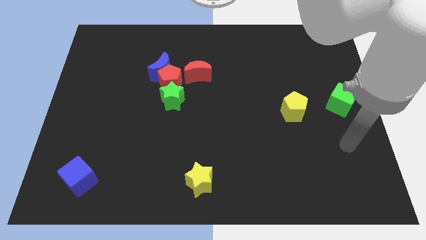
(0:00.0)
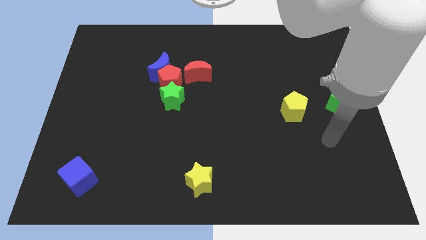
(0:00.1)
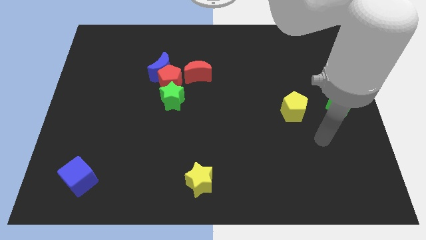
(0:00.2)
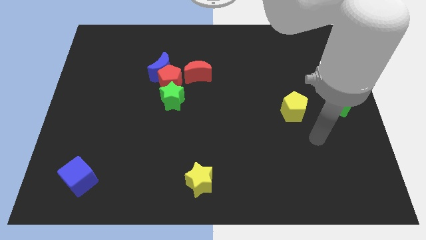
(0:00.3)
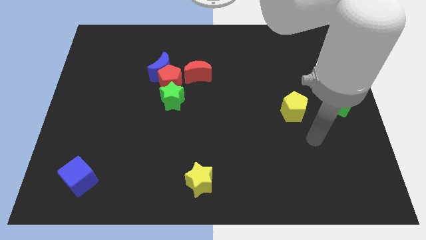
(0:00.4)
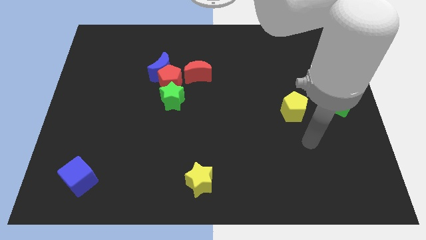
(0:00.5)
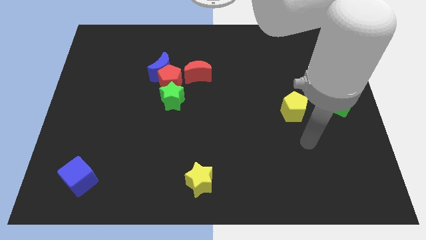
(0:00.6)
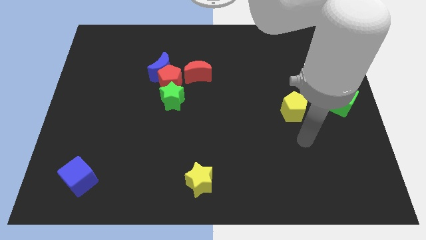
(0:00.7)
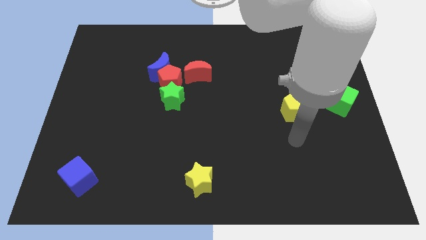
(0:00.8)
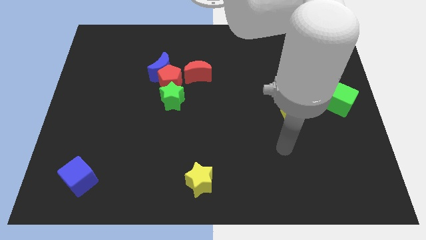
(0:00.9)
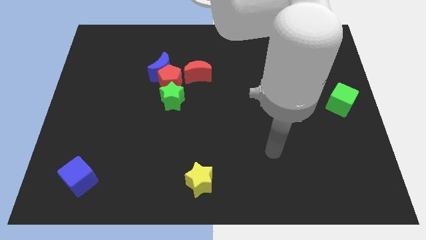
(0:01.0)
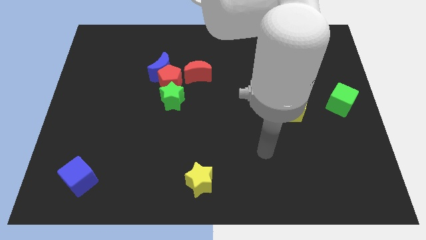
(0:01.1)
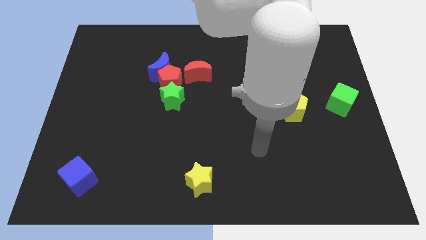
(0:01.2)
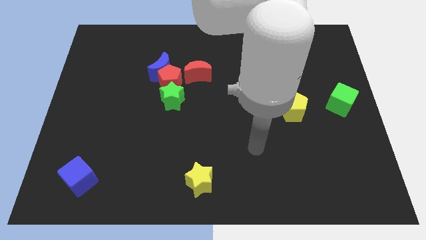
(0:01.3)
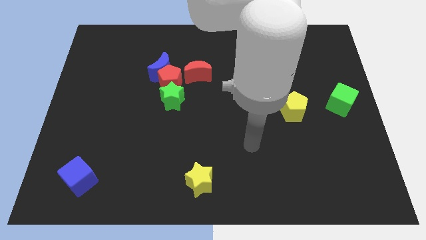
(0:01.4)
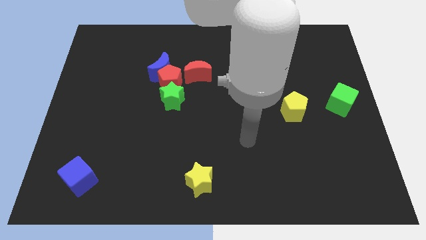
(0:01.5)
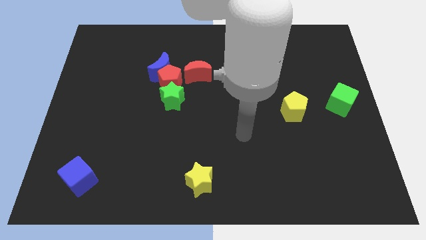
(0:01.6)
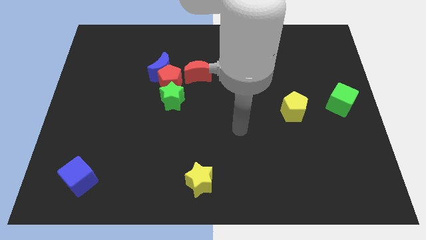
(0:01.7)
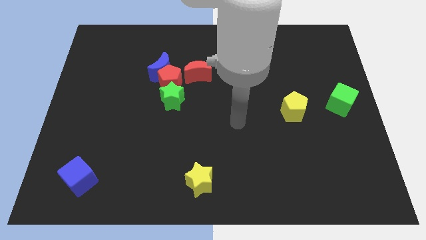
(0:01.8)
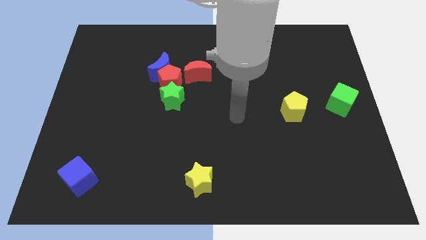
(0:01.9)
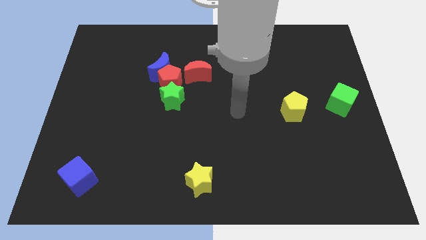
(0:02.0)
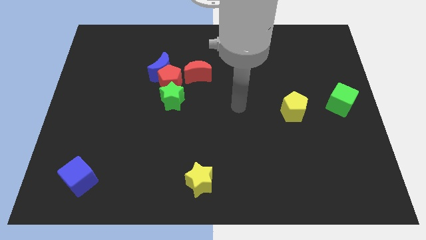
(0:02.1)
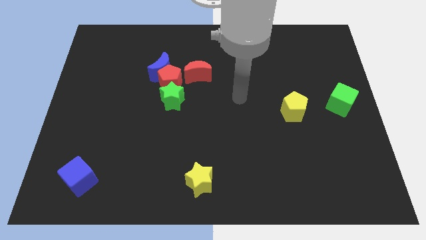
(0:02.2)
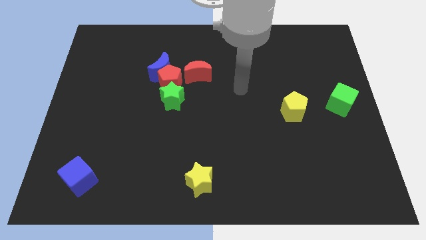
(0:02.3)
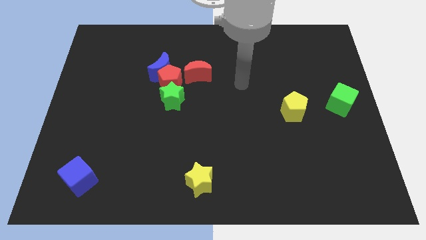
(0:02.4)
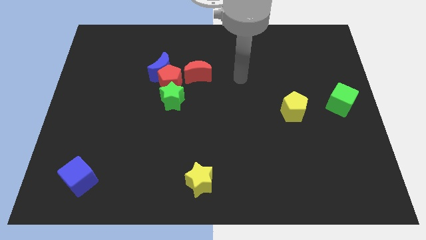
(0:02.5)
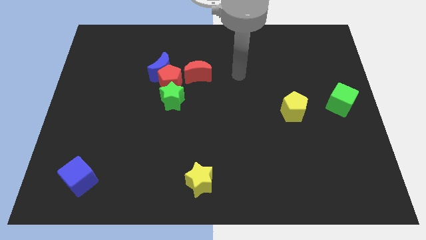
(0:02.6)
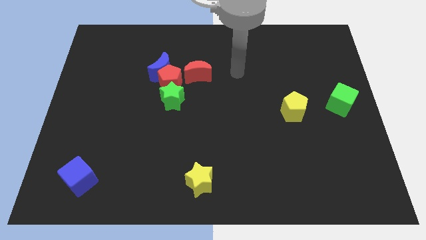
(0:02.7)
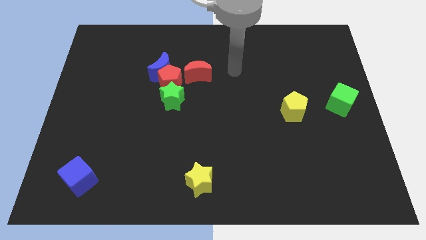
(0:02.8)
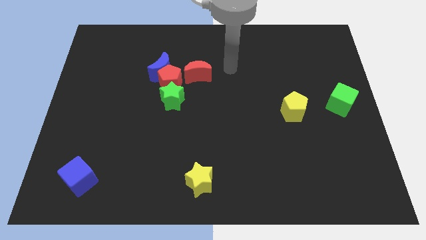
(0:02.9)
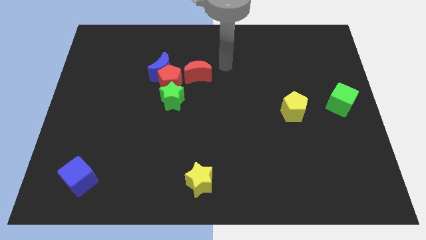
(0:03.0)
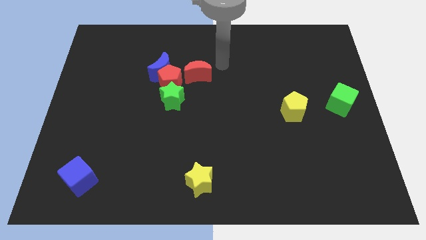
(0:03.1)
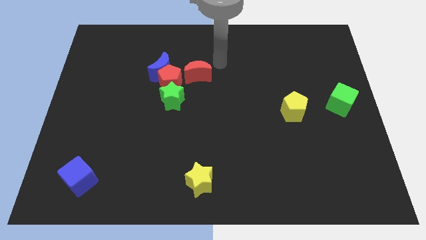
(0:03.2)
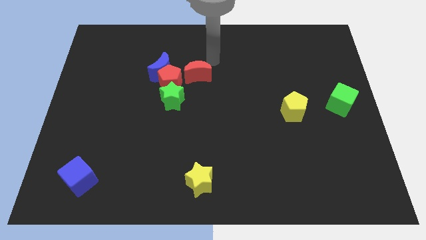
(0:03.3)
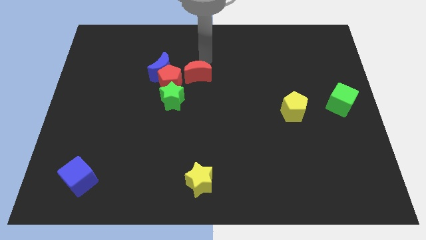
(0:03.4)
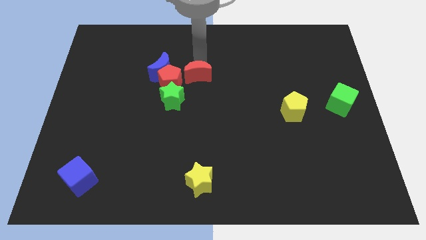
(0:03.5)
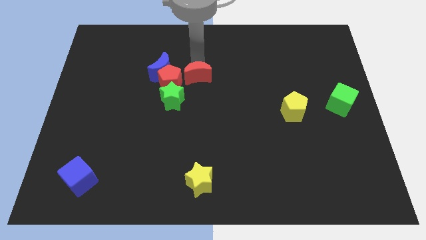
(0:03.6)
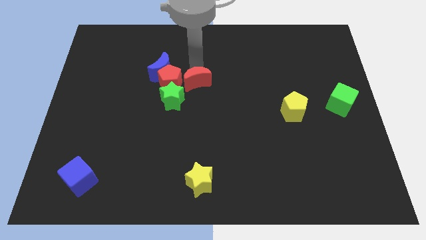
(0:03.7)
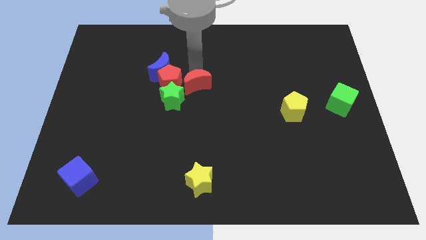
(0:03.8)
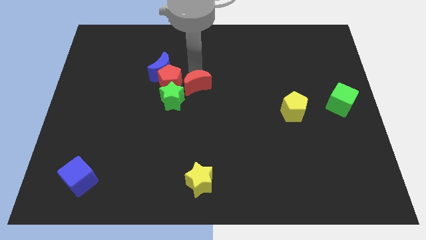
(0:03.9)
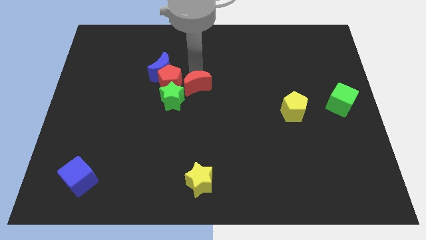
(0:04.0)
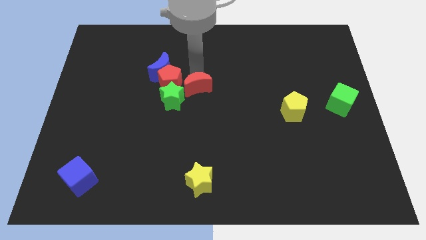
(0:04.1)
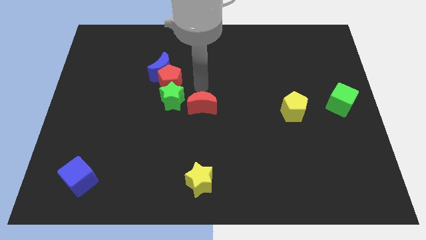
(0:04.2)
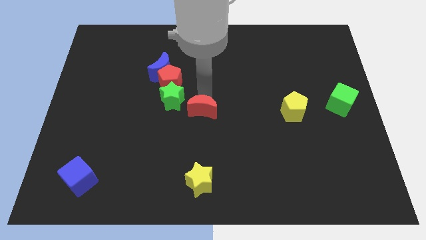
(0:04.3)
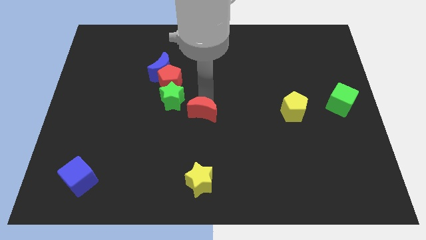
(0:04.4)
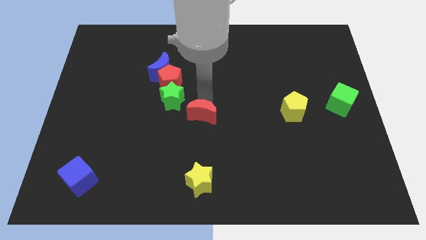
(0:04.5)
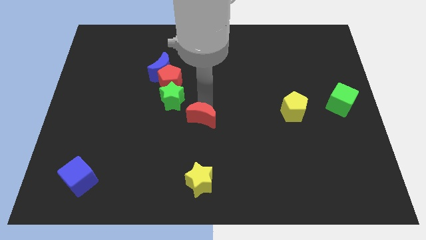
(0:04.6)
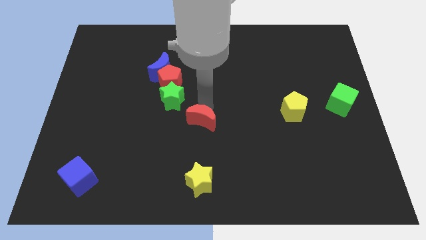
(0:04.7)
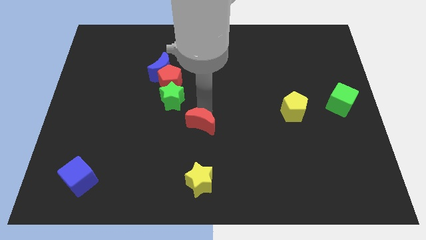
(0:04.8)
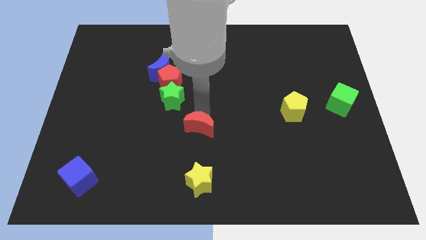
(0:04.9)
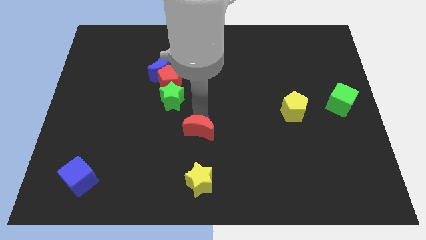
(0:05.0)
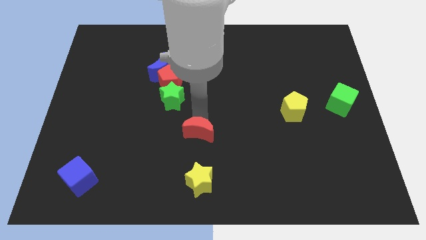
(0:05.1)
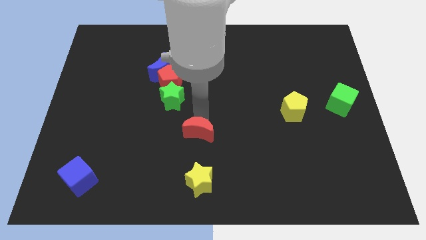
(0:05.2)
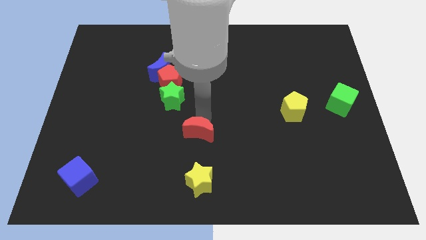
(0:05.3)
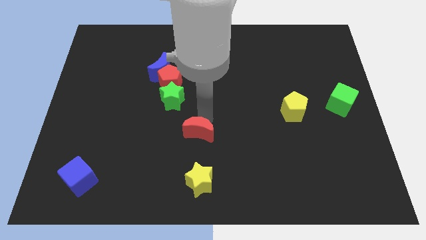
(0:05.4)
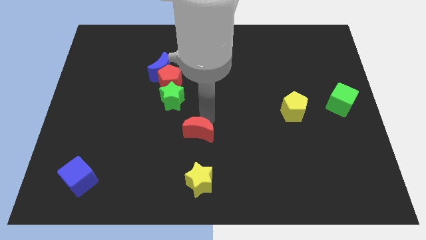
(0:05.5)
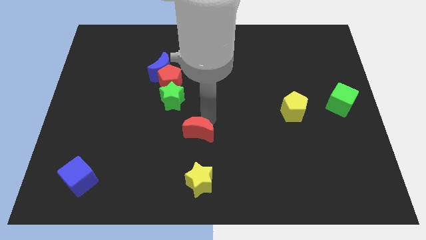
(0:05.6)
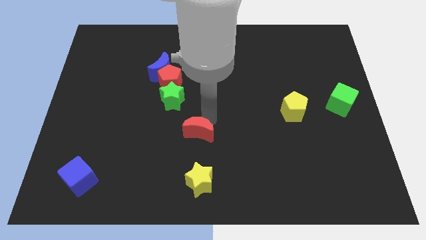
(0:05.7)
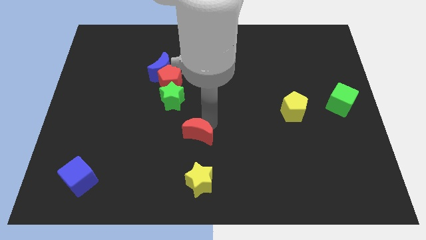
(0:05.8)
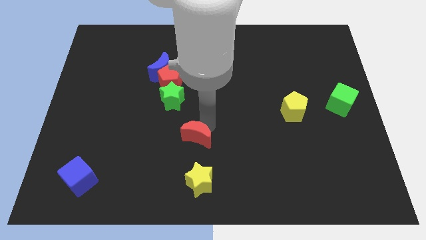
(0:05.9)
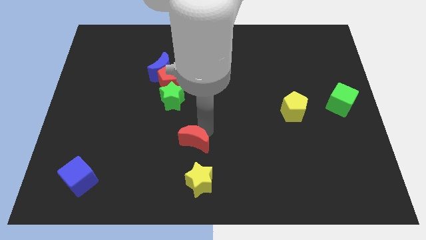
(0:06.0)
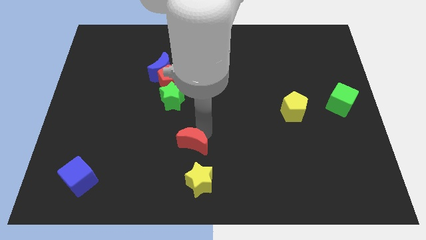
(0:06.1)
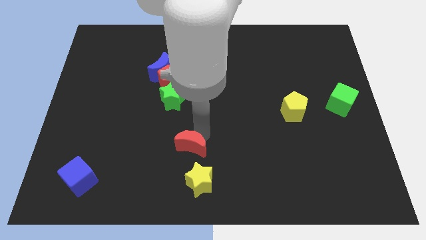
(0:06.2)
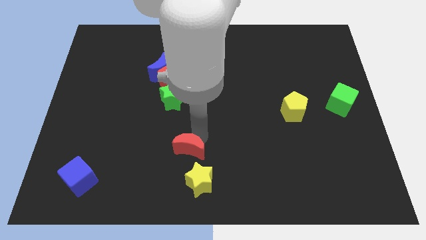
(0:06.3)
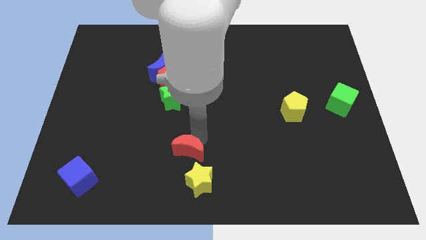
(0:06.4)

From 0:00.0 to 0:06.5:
place the red moon in between the green star and yellow star to form a line

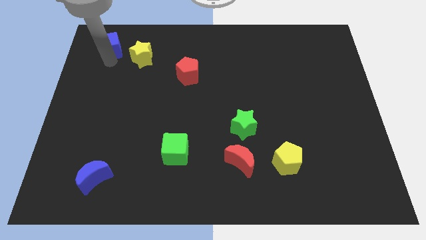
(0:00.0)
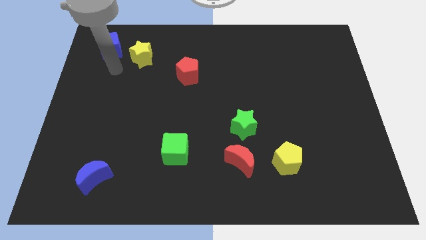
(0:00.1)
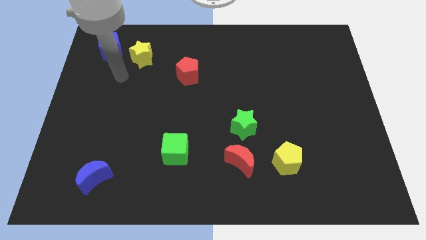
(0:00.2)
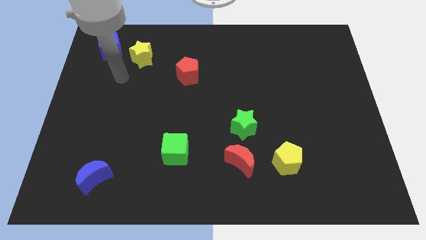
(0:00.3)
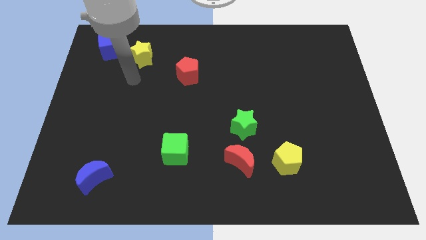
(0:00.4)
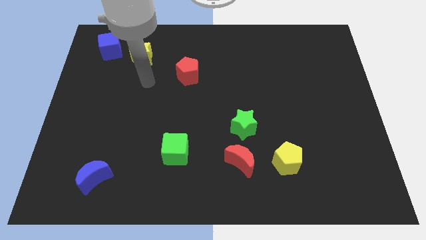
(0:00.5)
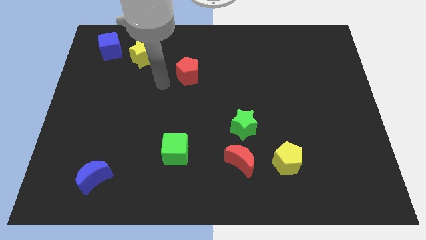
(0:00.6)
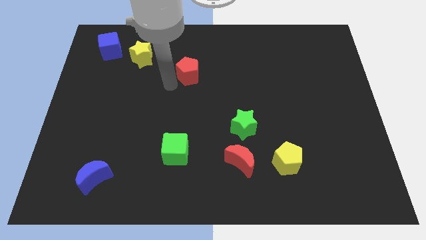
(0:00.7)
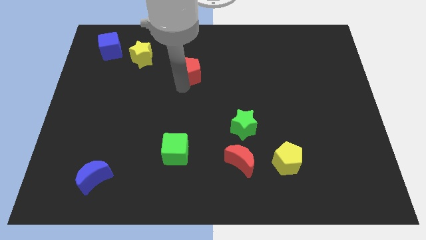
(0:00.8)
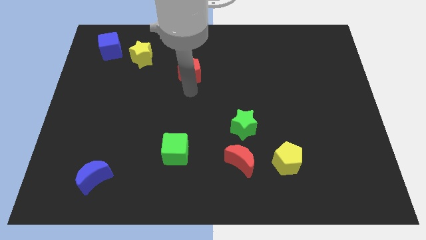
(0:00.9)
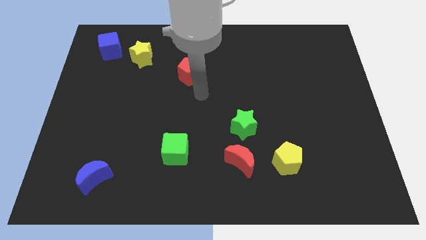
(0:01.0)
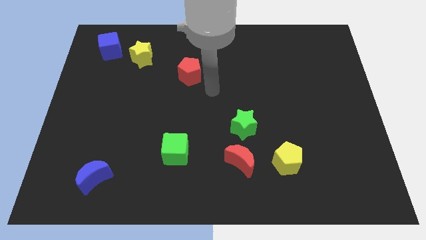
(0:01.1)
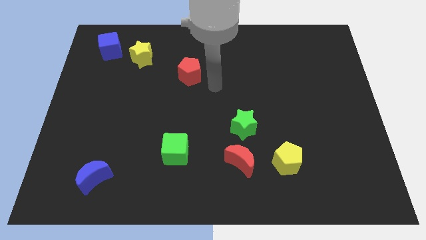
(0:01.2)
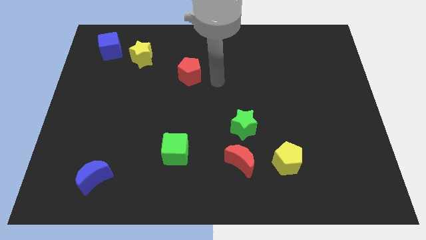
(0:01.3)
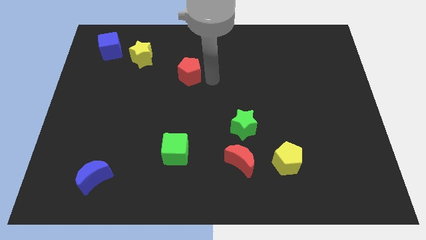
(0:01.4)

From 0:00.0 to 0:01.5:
move the hand to the right side of the red pentagon

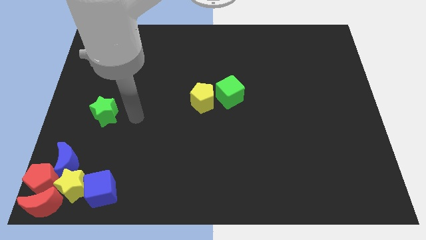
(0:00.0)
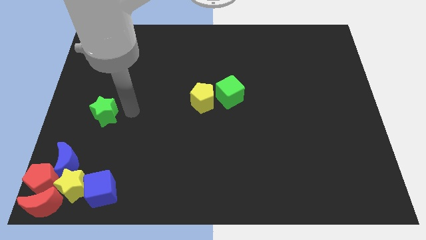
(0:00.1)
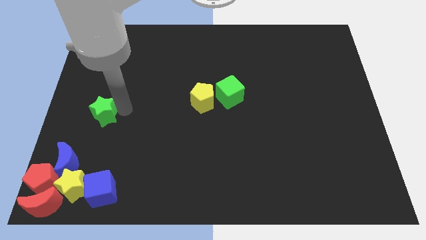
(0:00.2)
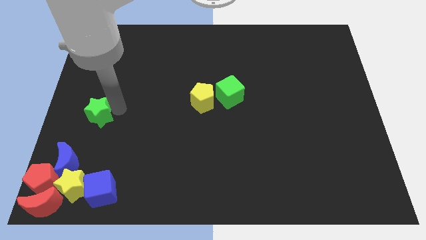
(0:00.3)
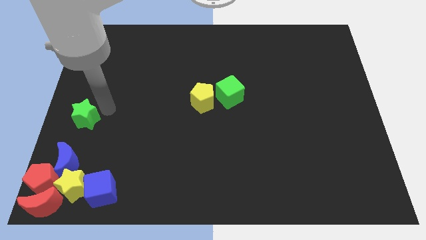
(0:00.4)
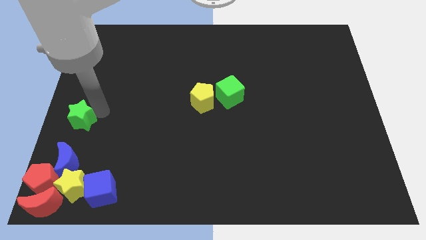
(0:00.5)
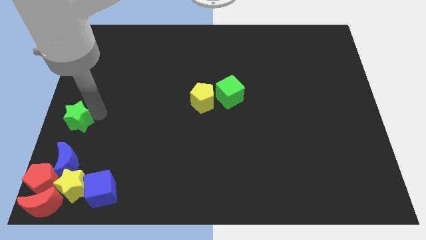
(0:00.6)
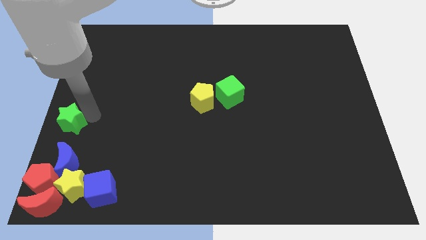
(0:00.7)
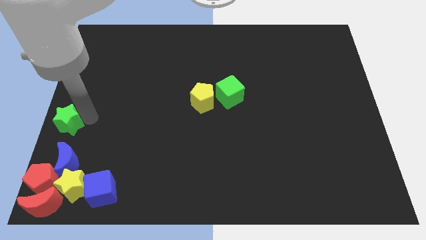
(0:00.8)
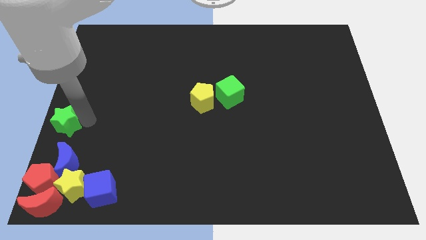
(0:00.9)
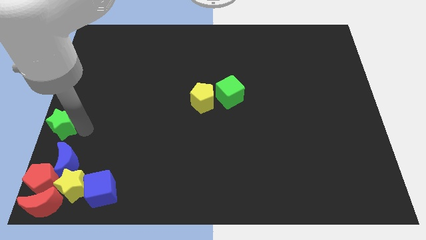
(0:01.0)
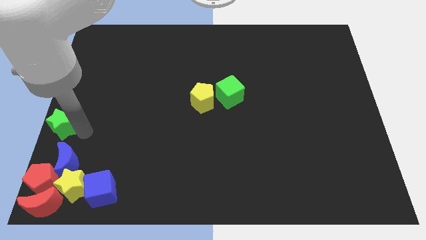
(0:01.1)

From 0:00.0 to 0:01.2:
place the green star above the blue moon
